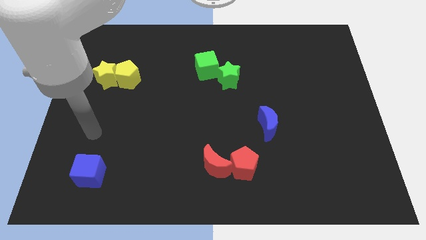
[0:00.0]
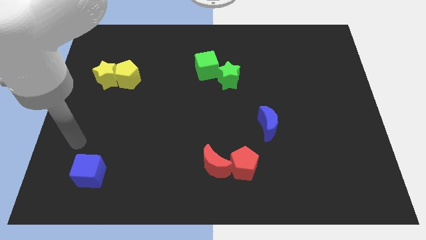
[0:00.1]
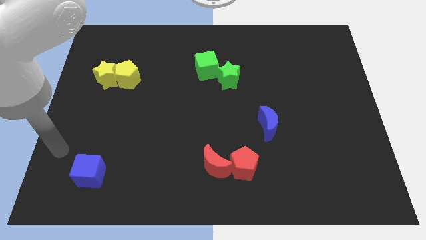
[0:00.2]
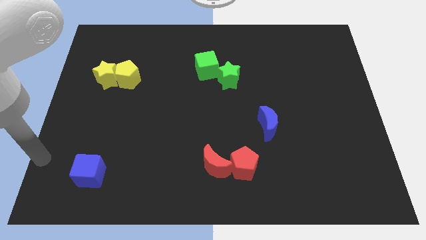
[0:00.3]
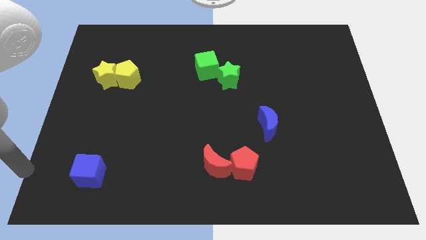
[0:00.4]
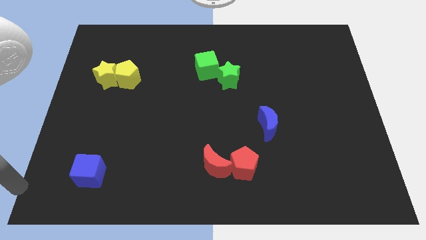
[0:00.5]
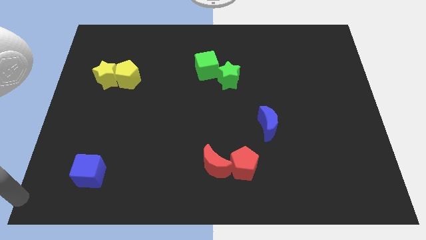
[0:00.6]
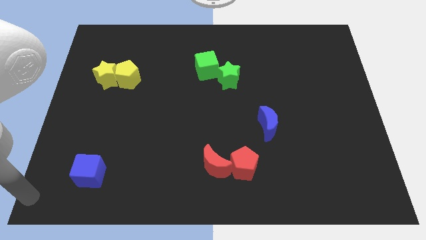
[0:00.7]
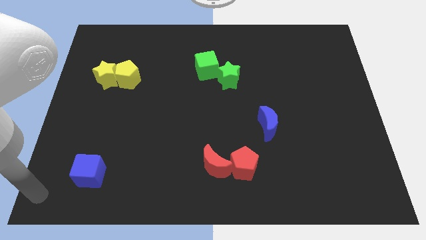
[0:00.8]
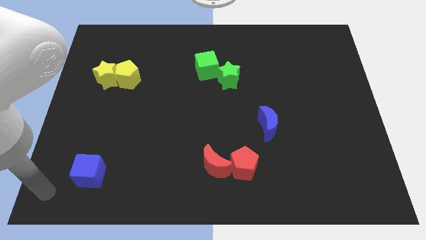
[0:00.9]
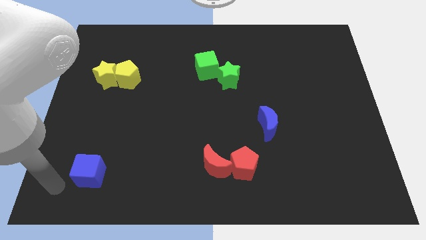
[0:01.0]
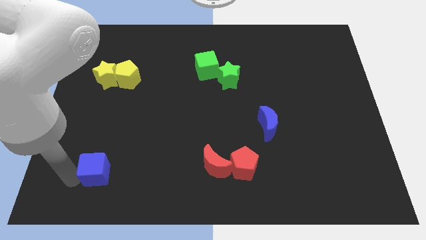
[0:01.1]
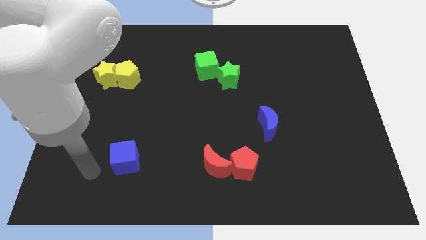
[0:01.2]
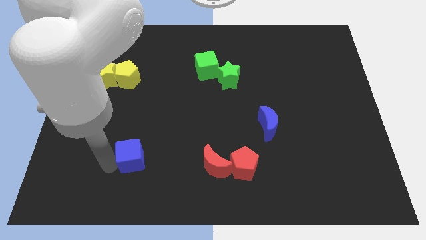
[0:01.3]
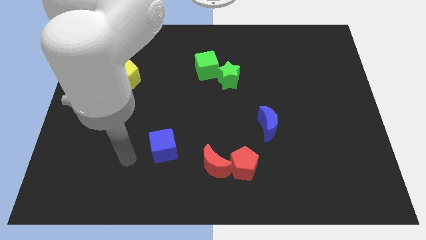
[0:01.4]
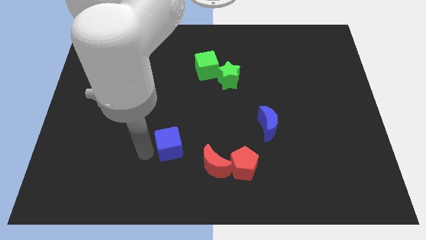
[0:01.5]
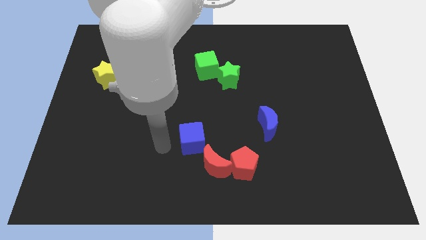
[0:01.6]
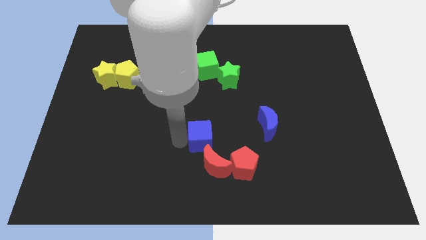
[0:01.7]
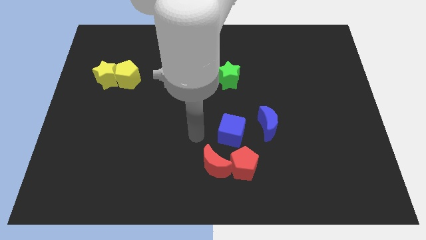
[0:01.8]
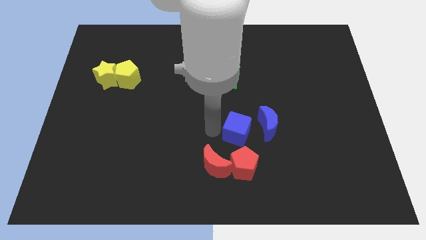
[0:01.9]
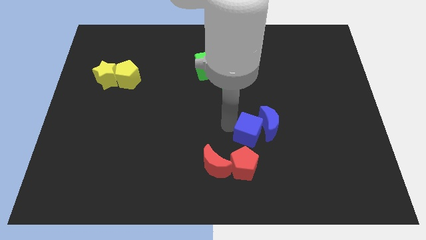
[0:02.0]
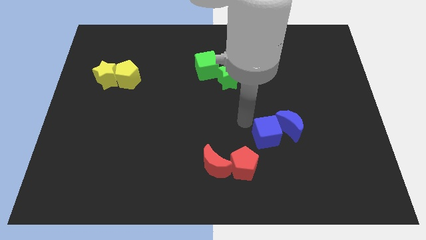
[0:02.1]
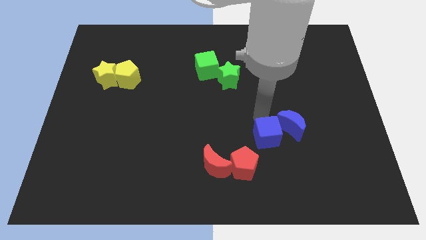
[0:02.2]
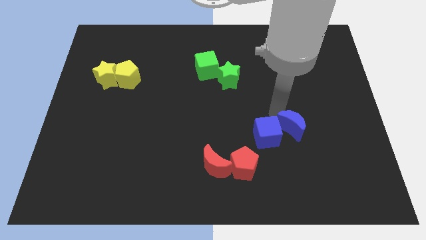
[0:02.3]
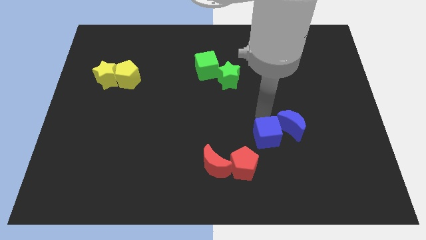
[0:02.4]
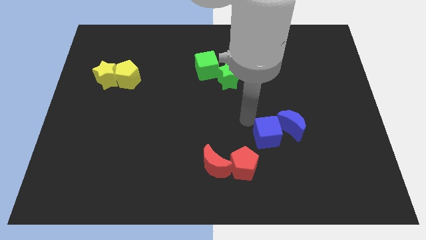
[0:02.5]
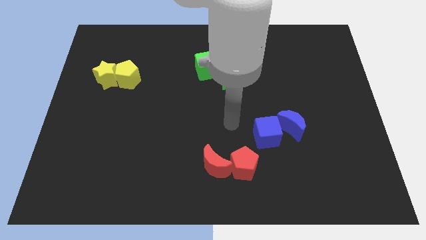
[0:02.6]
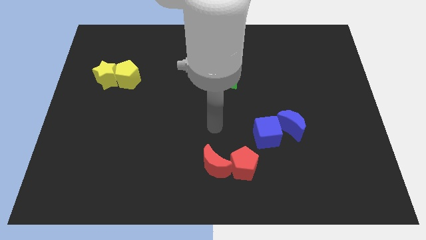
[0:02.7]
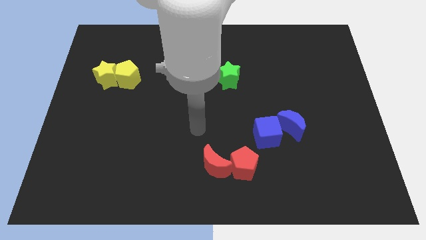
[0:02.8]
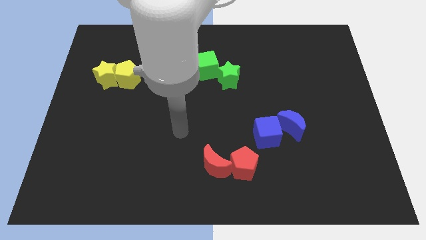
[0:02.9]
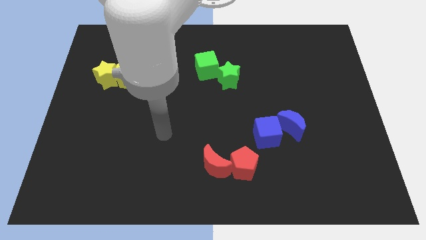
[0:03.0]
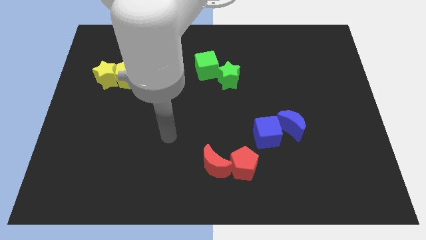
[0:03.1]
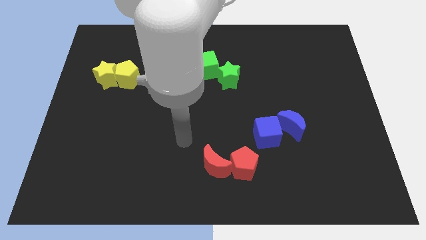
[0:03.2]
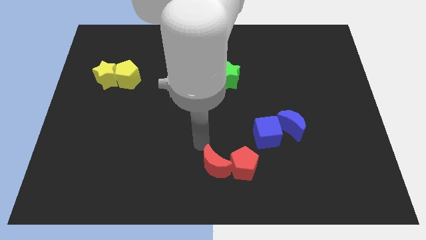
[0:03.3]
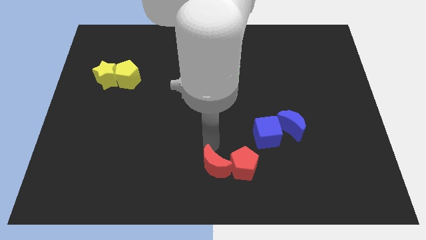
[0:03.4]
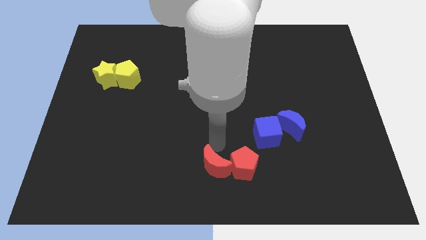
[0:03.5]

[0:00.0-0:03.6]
place the blue cube to the left of the blue moon

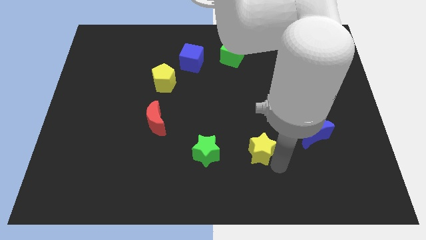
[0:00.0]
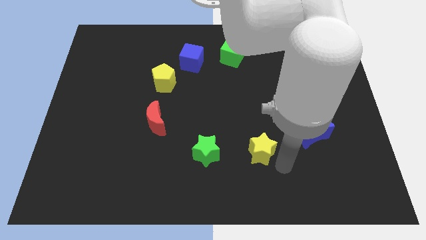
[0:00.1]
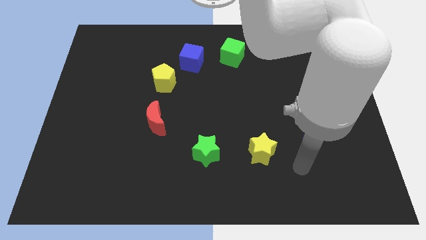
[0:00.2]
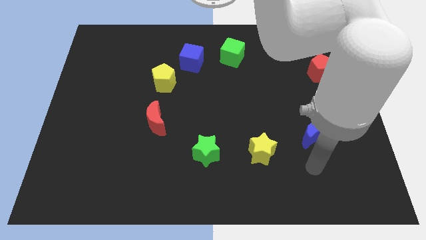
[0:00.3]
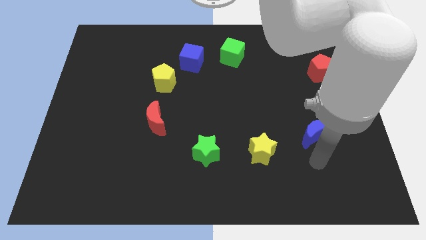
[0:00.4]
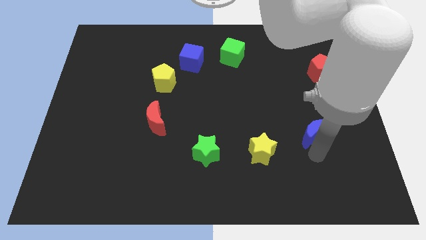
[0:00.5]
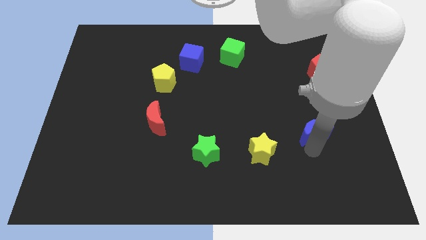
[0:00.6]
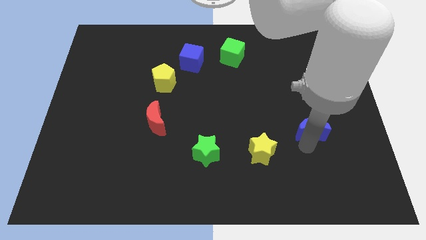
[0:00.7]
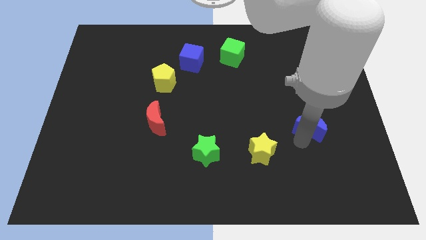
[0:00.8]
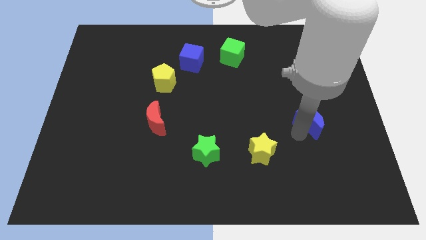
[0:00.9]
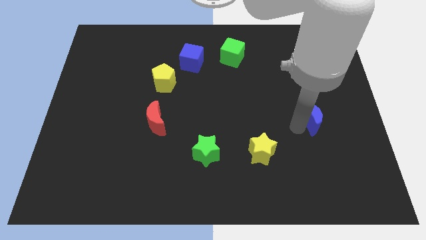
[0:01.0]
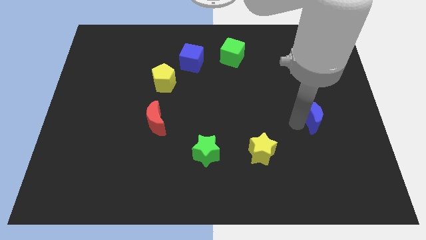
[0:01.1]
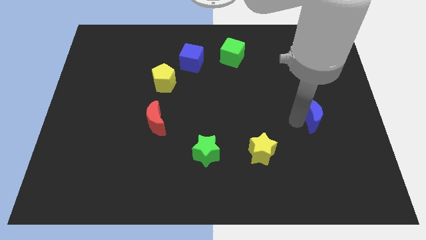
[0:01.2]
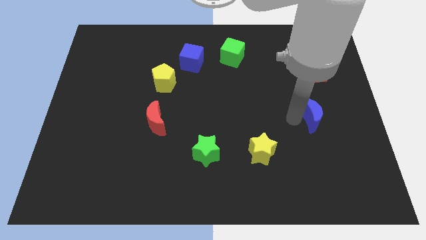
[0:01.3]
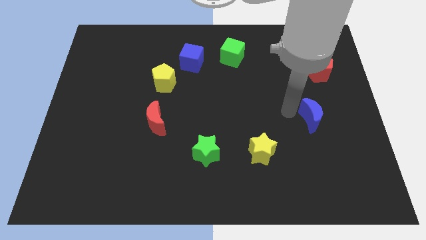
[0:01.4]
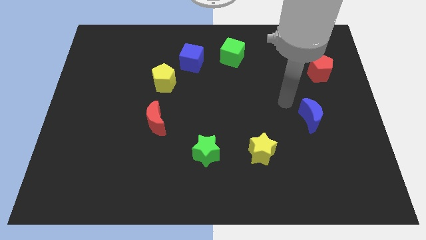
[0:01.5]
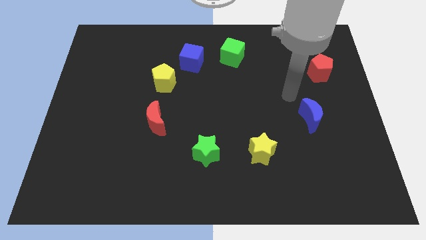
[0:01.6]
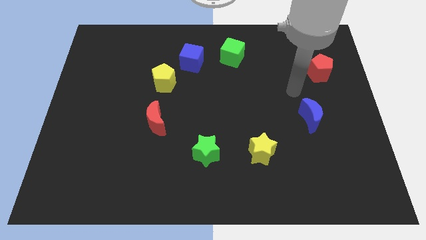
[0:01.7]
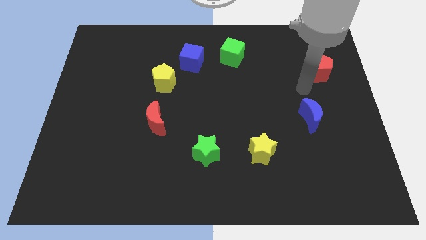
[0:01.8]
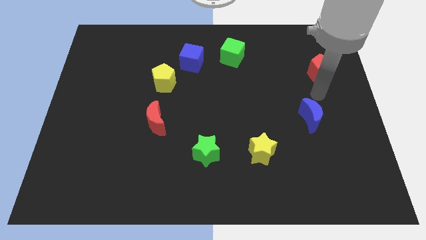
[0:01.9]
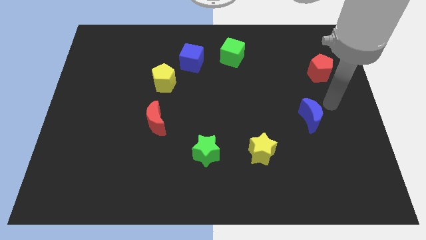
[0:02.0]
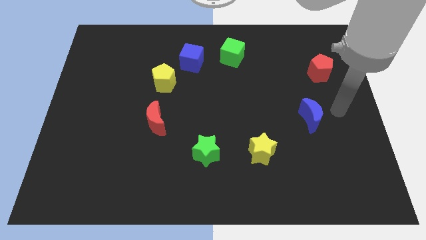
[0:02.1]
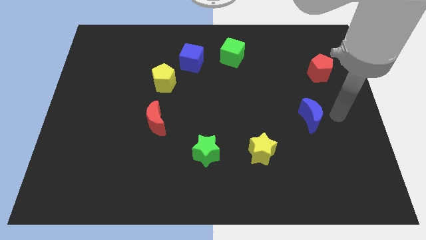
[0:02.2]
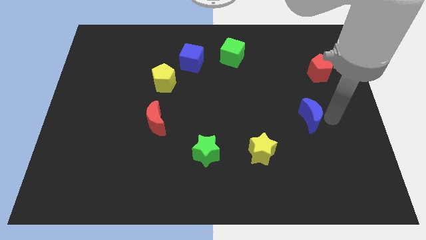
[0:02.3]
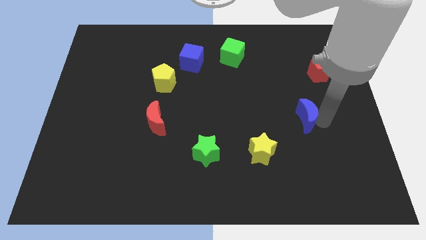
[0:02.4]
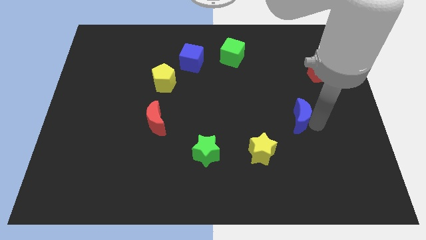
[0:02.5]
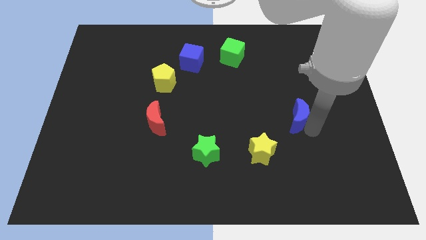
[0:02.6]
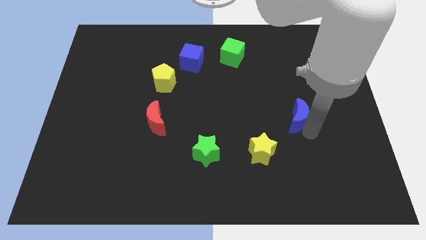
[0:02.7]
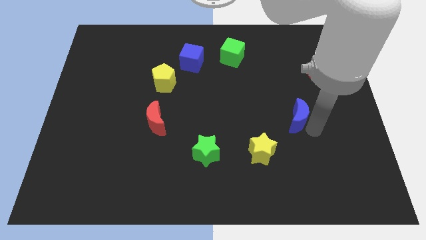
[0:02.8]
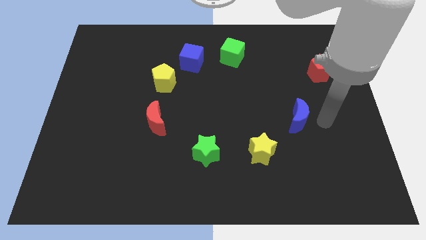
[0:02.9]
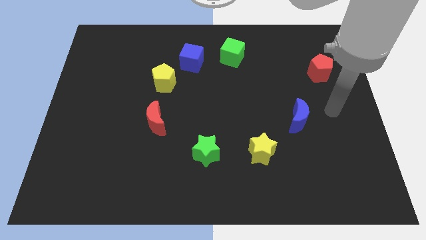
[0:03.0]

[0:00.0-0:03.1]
place the blue moon diagonally above the top right side of the yellow star

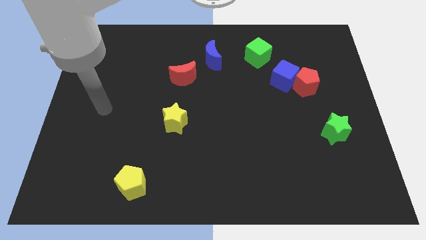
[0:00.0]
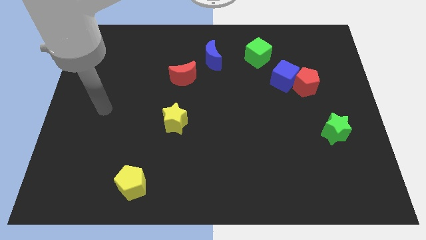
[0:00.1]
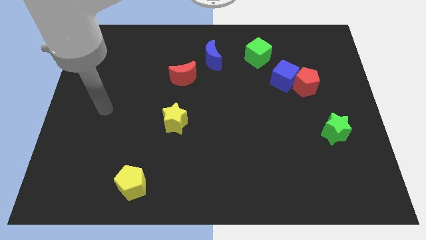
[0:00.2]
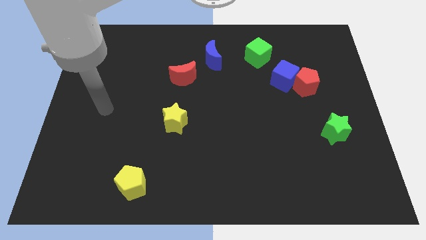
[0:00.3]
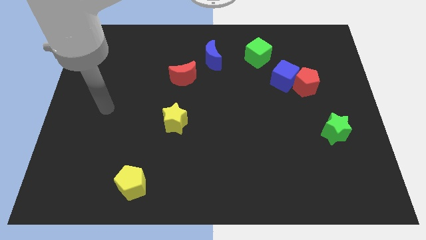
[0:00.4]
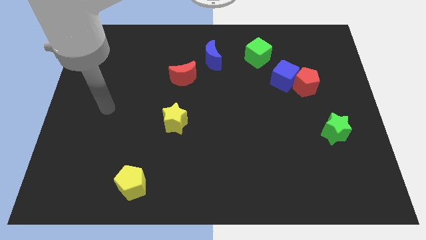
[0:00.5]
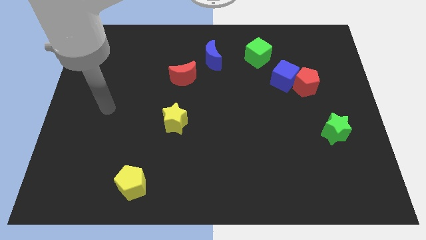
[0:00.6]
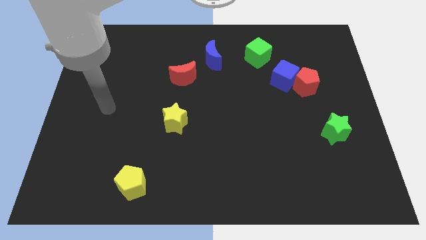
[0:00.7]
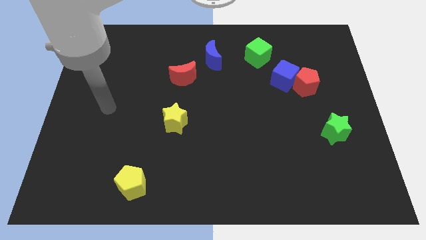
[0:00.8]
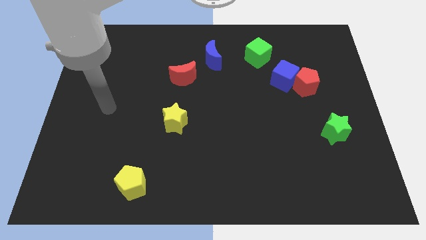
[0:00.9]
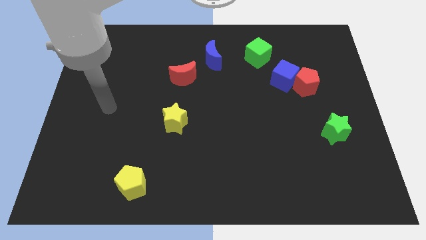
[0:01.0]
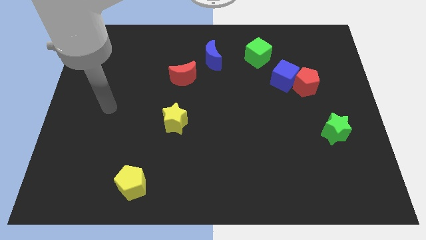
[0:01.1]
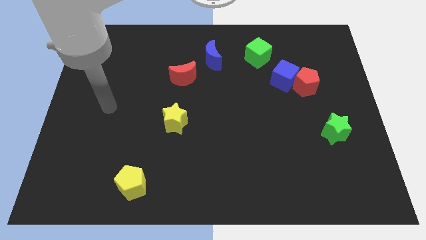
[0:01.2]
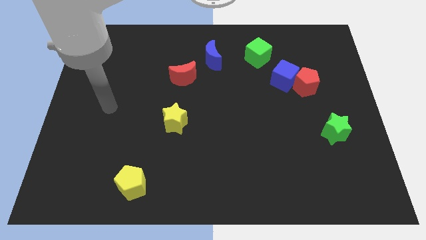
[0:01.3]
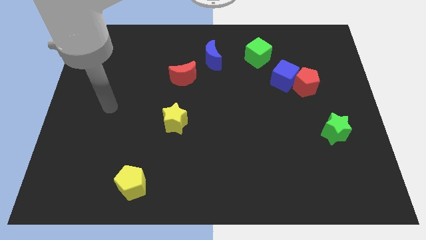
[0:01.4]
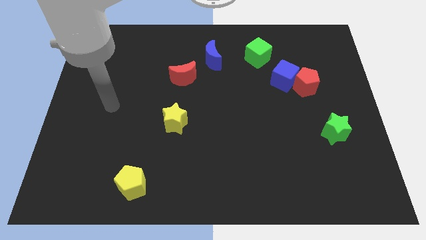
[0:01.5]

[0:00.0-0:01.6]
move your arm slightly up

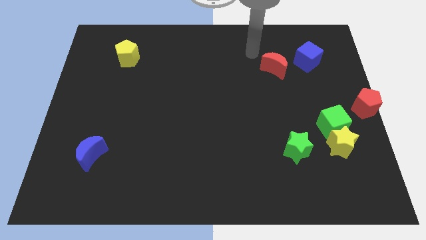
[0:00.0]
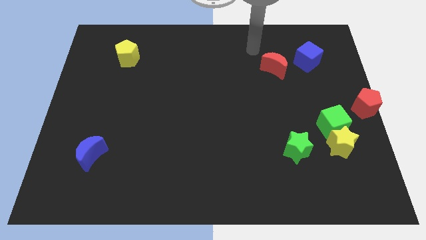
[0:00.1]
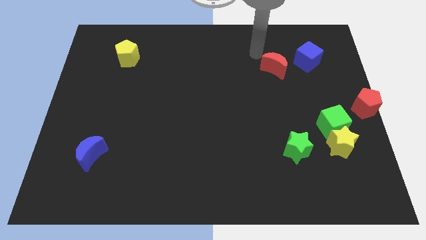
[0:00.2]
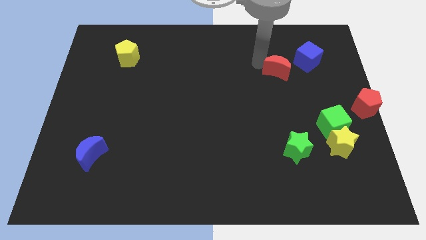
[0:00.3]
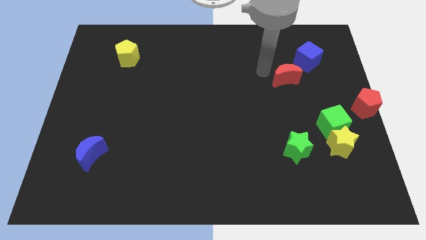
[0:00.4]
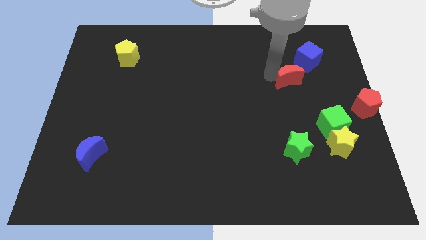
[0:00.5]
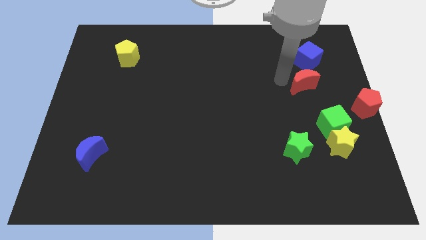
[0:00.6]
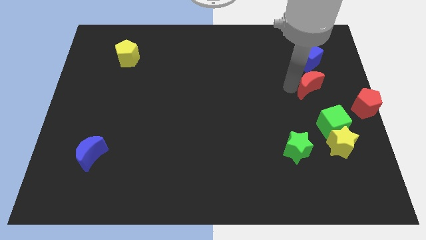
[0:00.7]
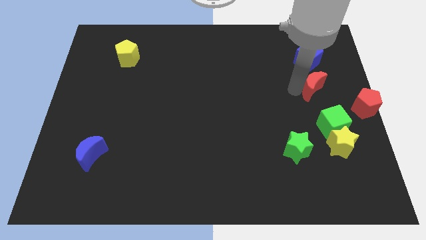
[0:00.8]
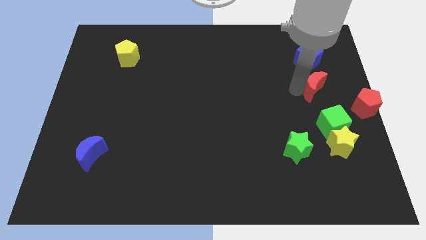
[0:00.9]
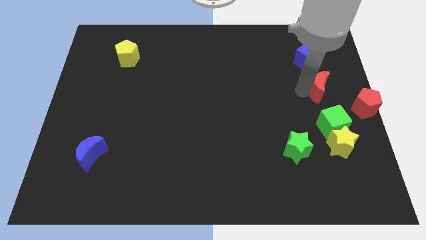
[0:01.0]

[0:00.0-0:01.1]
put the red moon in between the green cube and blue cube
